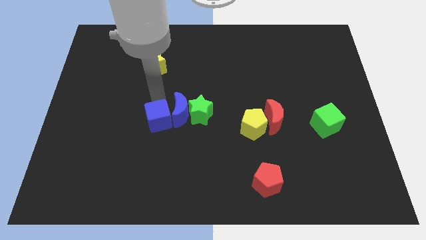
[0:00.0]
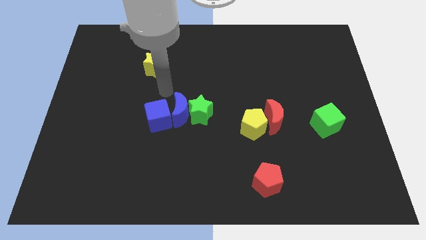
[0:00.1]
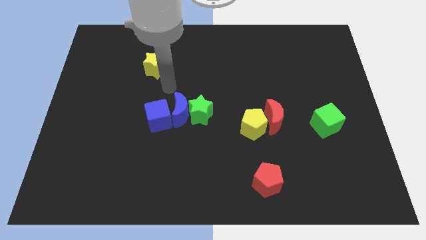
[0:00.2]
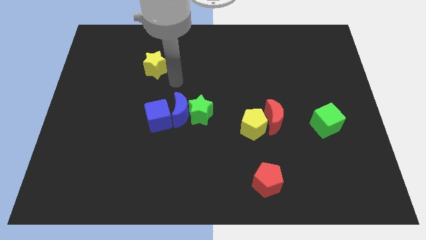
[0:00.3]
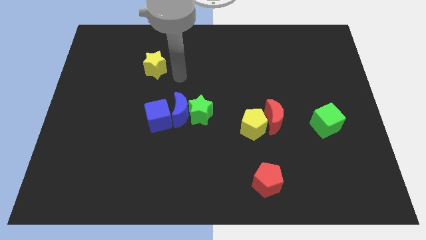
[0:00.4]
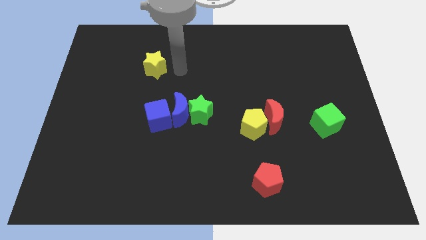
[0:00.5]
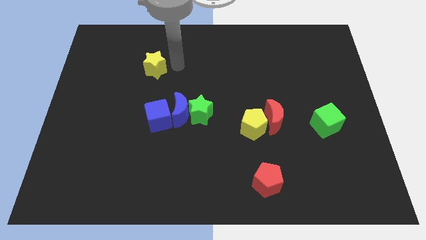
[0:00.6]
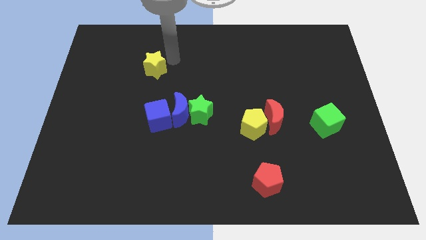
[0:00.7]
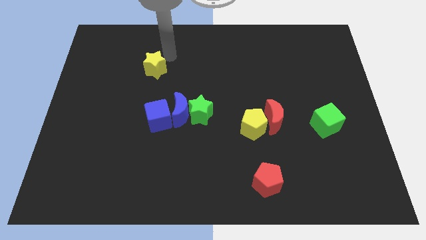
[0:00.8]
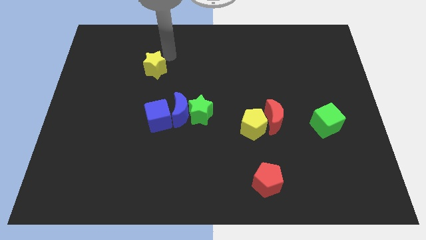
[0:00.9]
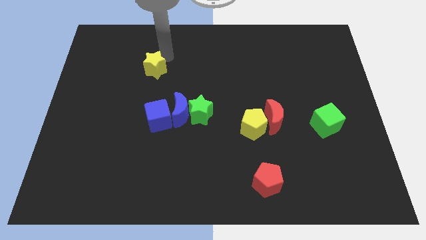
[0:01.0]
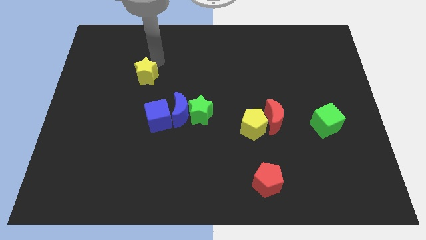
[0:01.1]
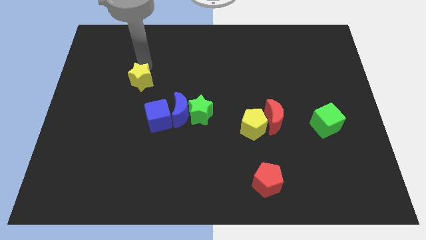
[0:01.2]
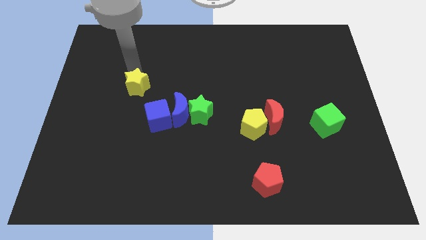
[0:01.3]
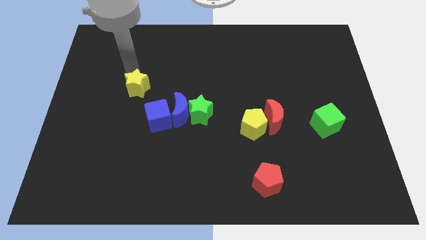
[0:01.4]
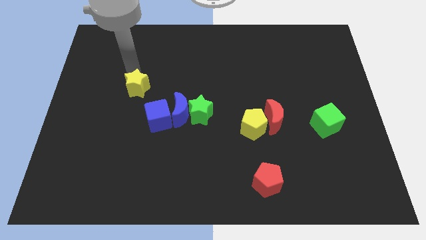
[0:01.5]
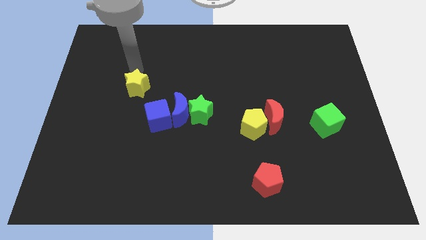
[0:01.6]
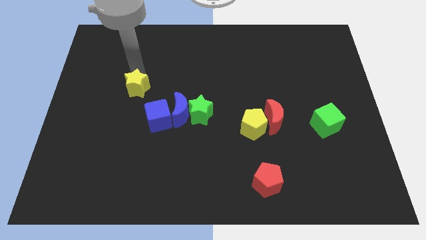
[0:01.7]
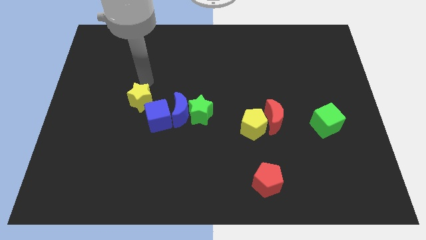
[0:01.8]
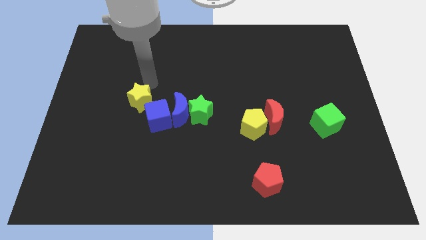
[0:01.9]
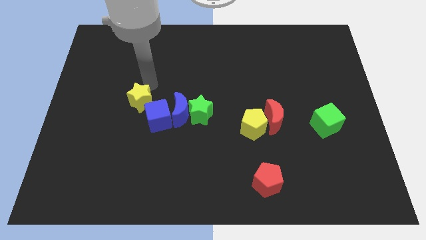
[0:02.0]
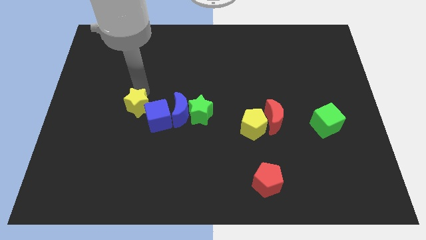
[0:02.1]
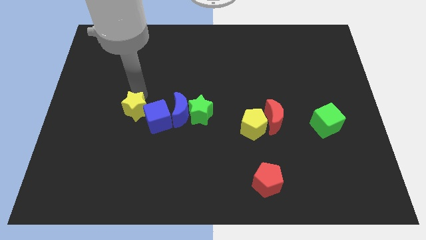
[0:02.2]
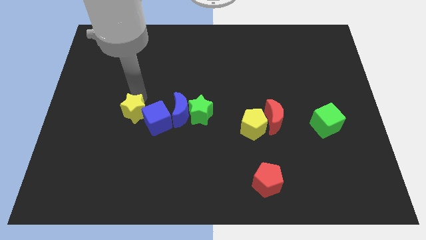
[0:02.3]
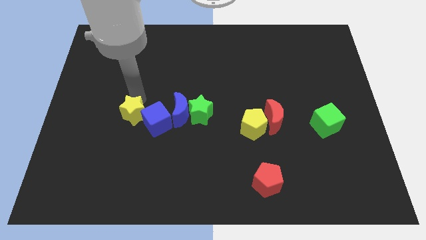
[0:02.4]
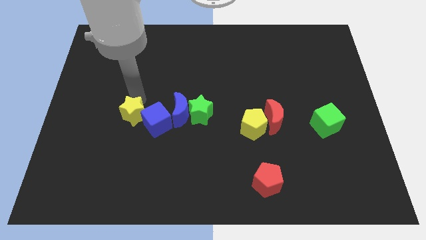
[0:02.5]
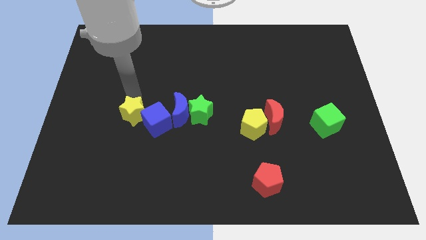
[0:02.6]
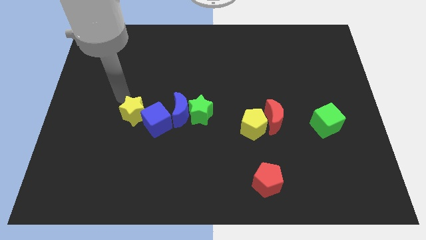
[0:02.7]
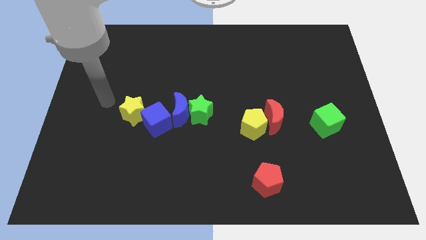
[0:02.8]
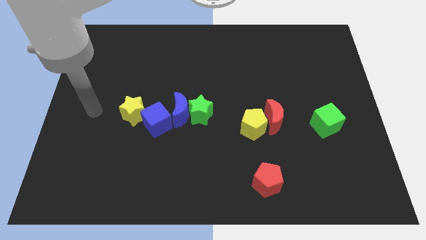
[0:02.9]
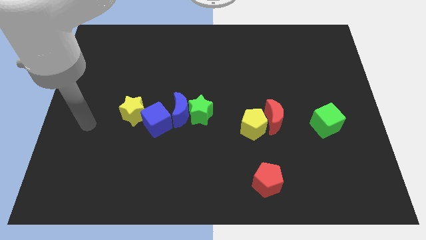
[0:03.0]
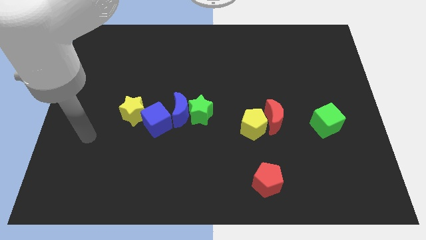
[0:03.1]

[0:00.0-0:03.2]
move the yellow star into the blue cube

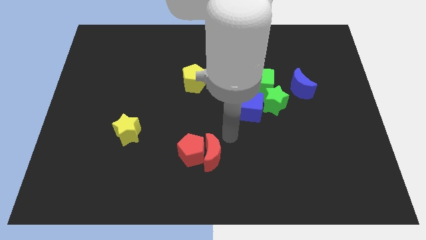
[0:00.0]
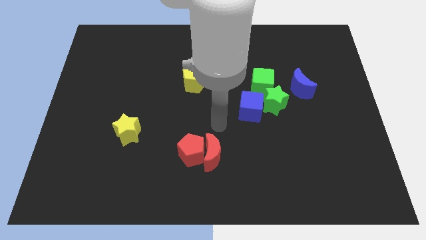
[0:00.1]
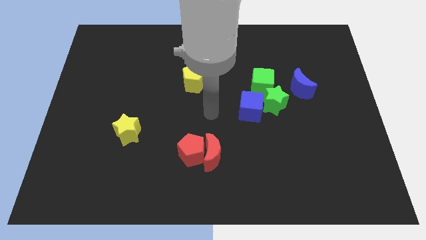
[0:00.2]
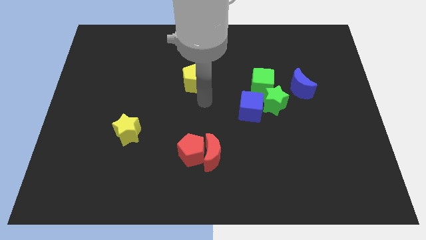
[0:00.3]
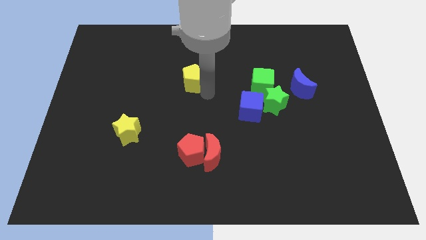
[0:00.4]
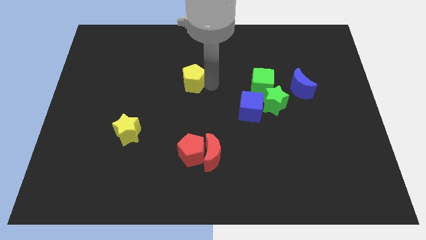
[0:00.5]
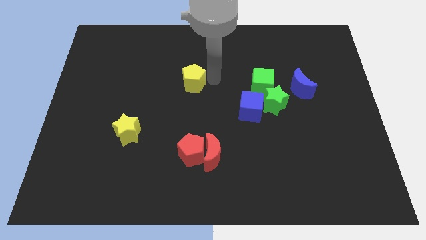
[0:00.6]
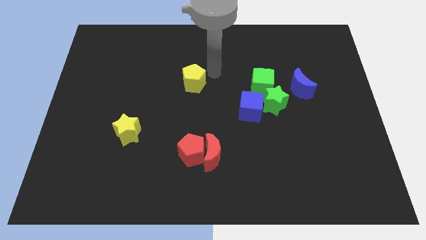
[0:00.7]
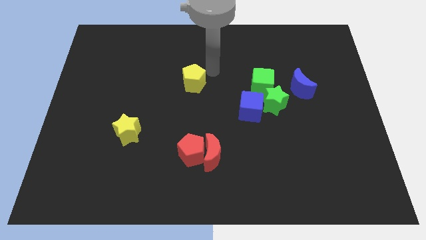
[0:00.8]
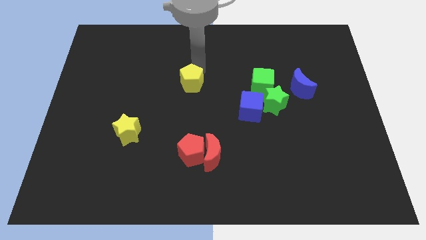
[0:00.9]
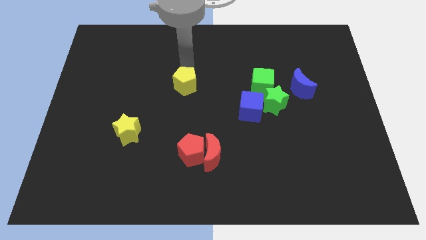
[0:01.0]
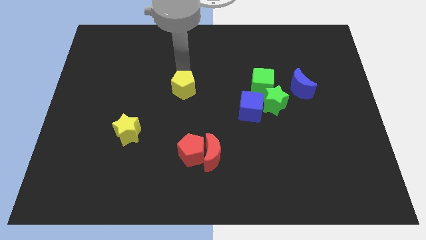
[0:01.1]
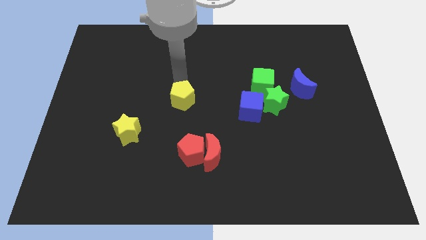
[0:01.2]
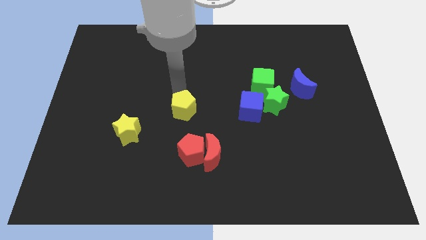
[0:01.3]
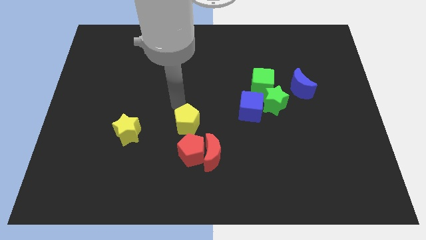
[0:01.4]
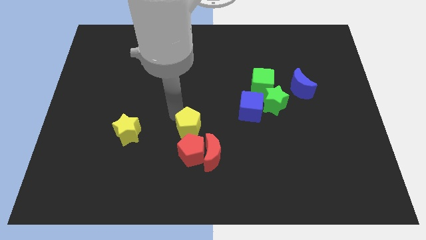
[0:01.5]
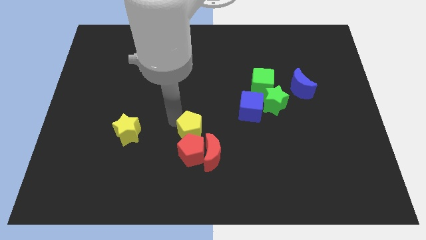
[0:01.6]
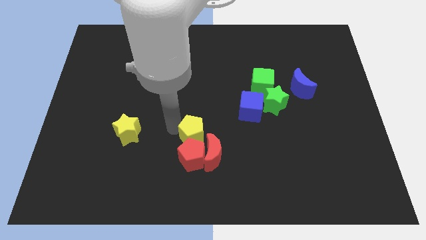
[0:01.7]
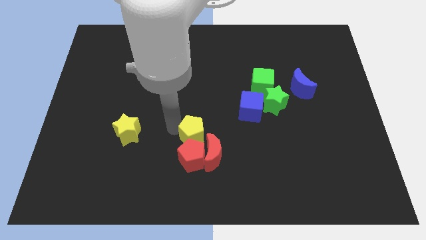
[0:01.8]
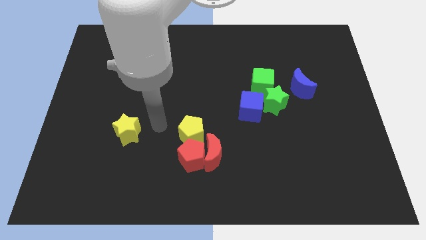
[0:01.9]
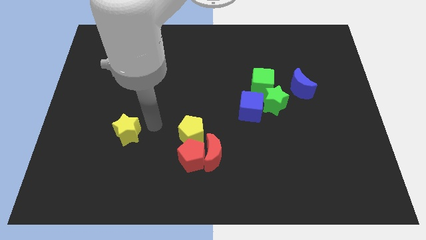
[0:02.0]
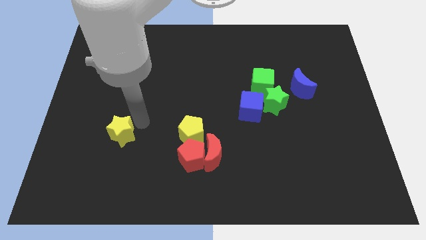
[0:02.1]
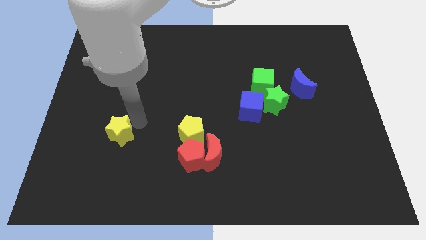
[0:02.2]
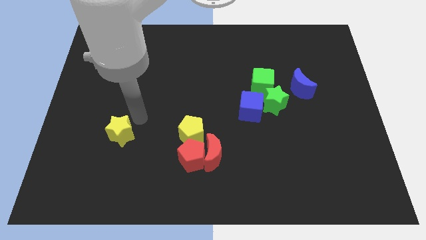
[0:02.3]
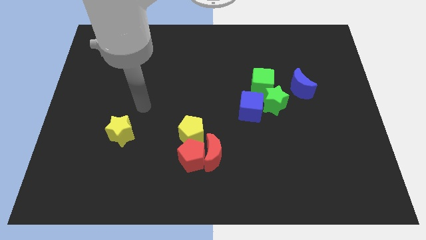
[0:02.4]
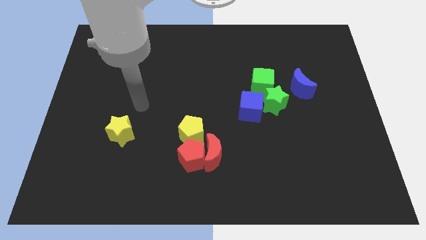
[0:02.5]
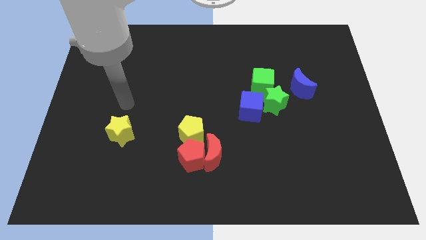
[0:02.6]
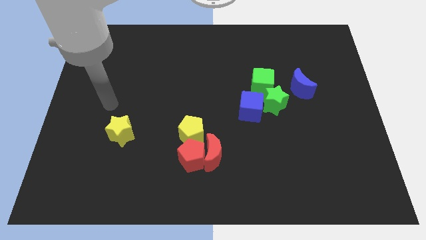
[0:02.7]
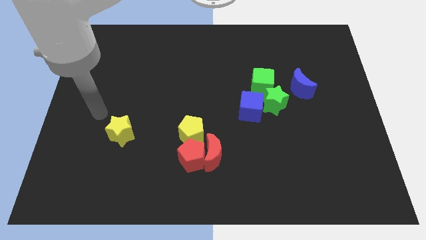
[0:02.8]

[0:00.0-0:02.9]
push the yellow pentagon into the red pentagon and red moon

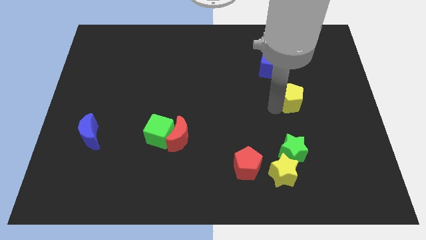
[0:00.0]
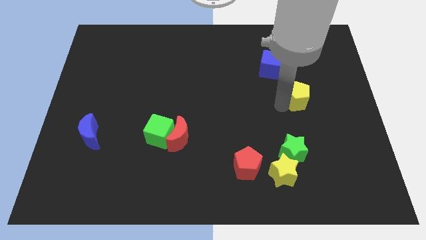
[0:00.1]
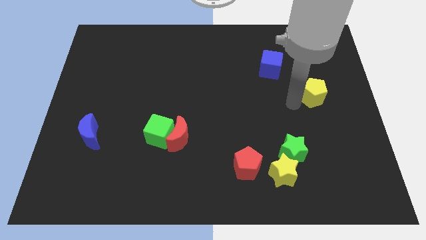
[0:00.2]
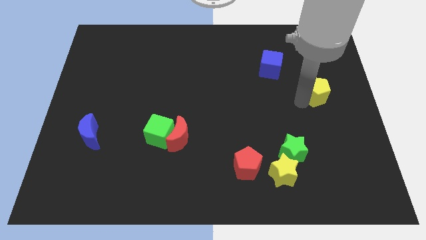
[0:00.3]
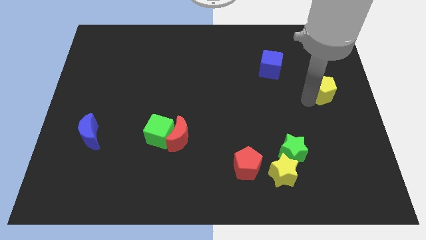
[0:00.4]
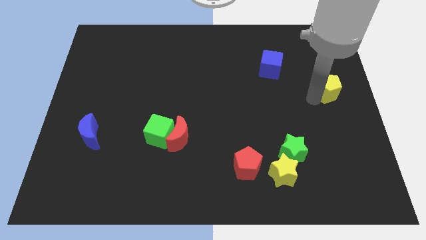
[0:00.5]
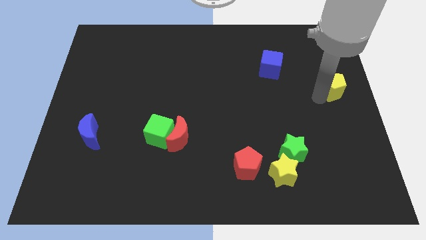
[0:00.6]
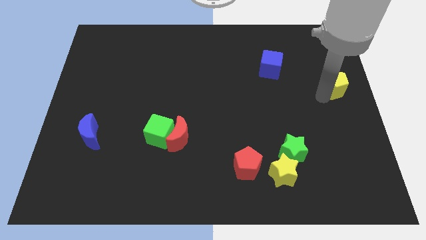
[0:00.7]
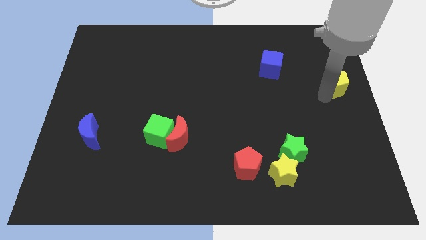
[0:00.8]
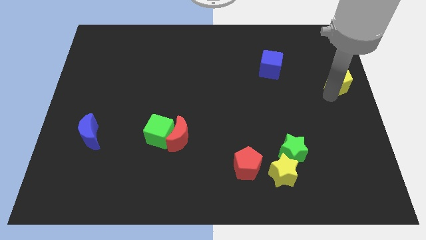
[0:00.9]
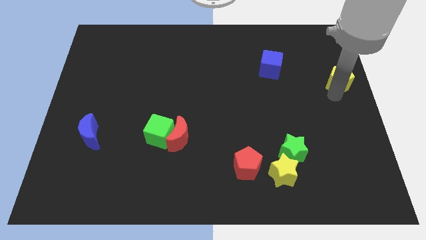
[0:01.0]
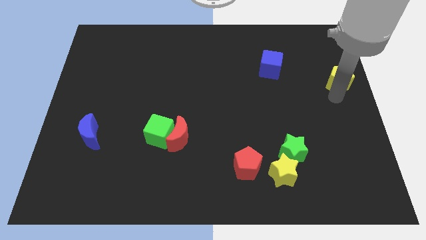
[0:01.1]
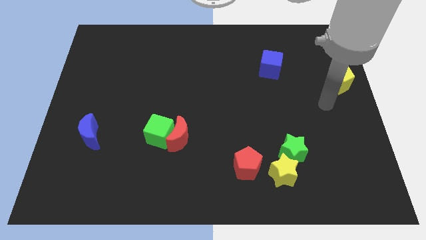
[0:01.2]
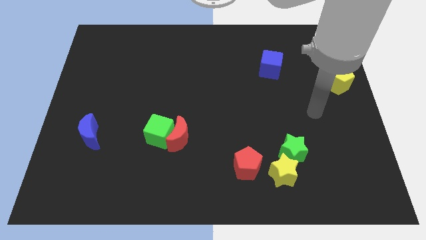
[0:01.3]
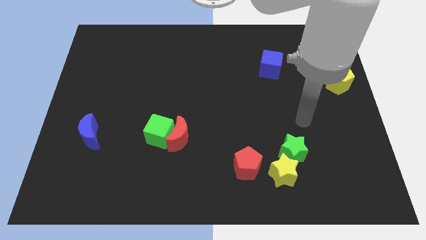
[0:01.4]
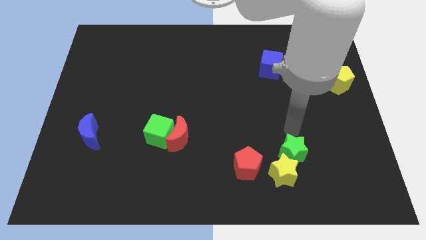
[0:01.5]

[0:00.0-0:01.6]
push the yellow pentagon diagonally on the top right side of the green star

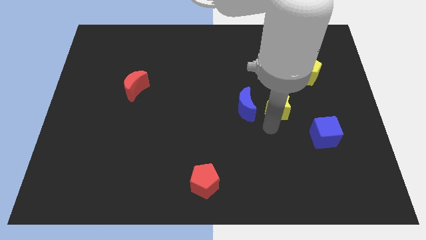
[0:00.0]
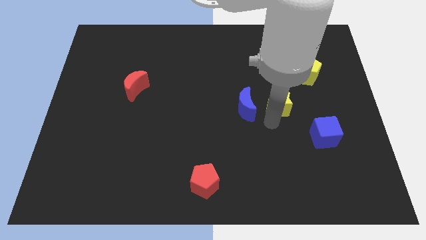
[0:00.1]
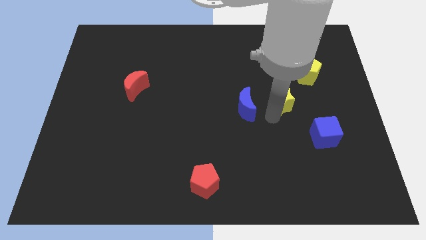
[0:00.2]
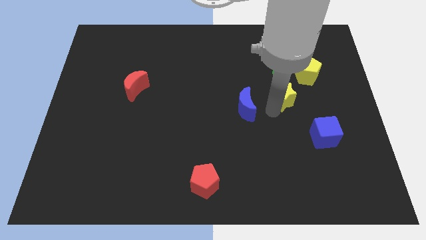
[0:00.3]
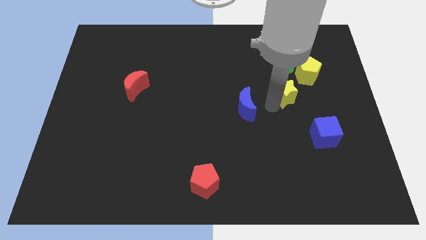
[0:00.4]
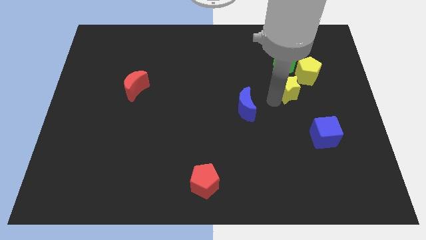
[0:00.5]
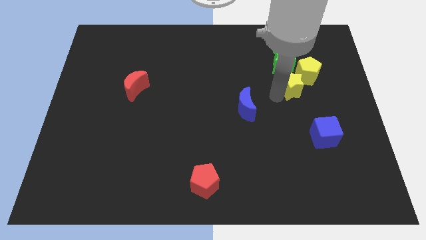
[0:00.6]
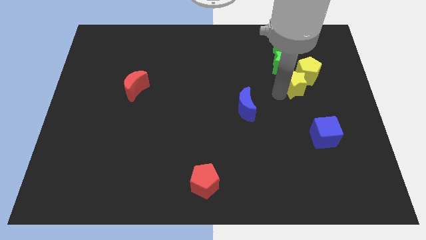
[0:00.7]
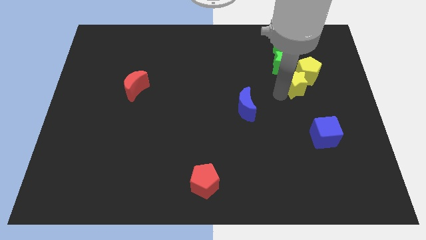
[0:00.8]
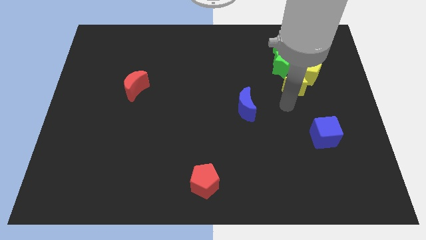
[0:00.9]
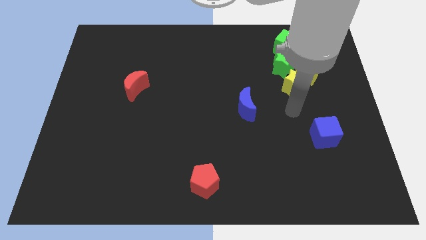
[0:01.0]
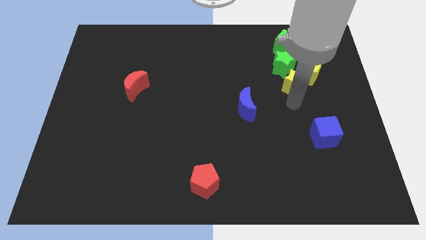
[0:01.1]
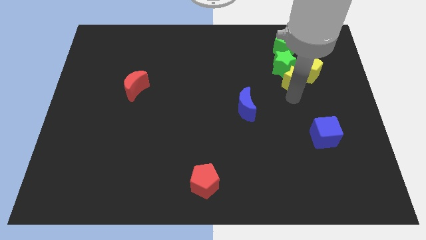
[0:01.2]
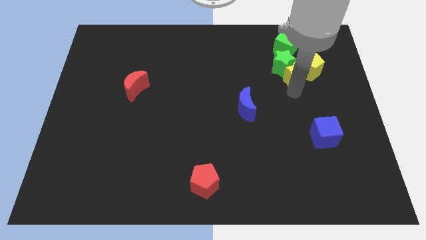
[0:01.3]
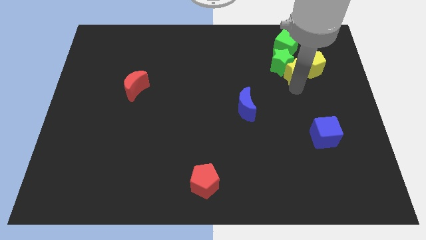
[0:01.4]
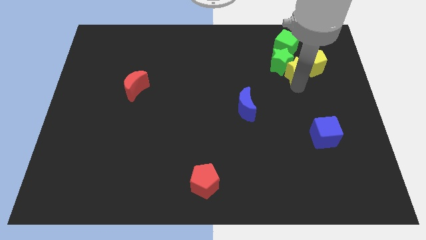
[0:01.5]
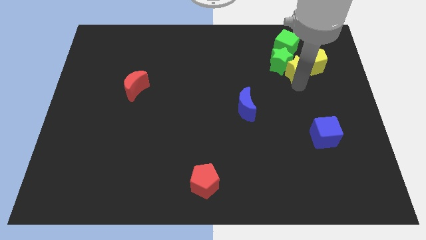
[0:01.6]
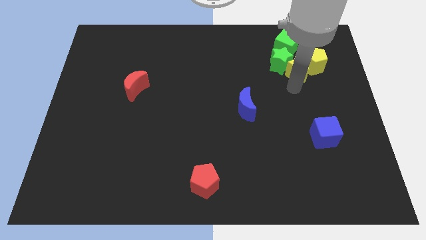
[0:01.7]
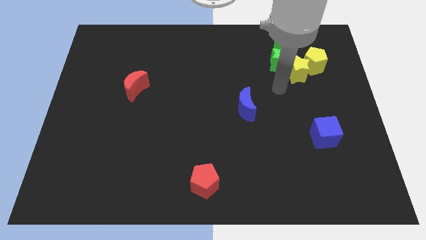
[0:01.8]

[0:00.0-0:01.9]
move the yellow star into the yellow pentagon
